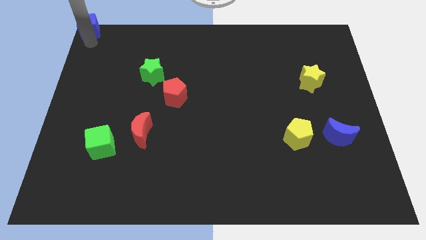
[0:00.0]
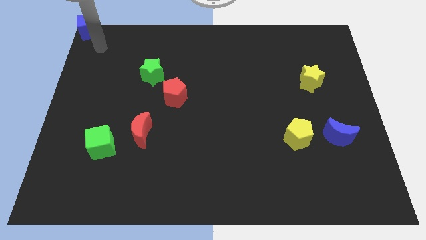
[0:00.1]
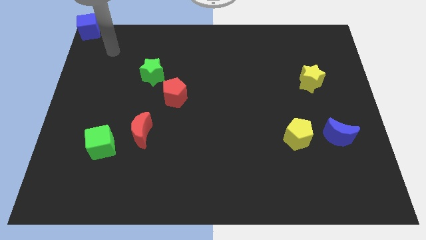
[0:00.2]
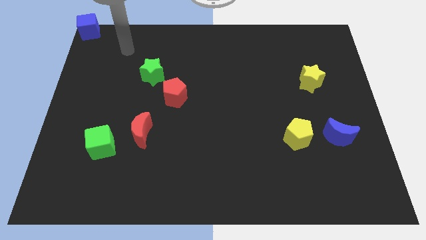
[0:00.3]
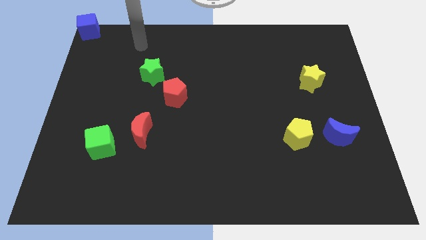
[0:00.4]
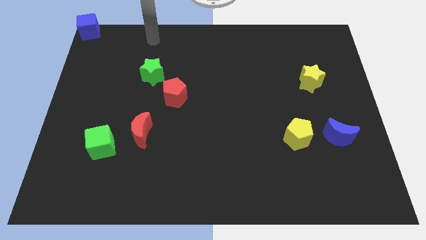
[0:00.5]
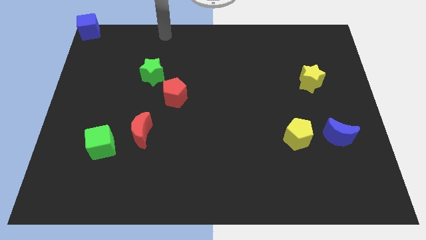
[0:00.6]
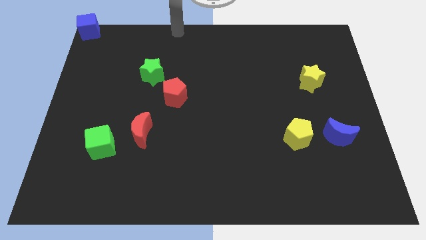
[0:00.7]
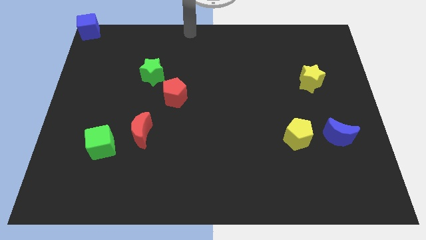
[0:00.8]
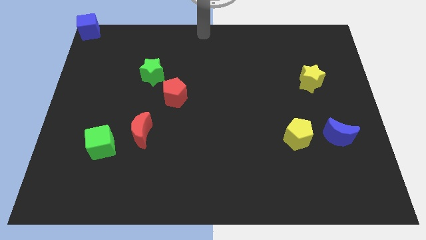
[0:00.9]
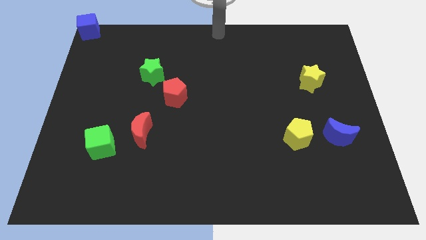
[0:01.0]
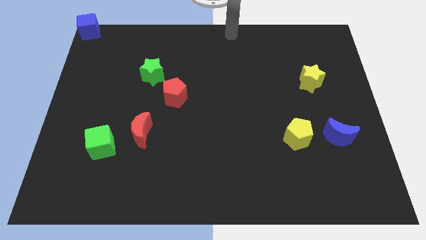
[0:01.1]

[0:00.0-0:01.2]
move yourself to the top center of the board

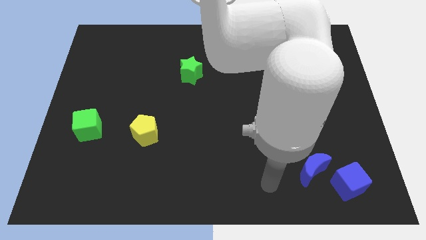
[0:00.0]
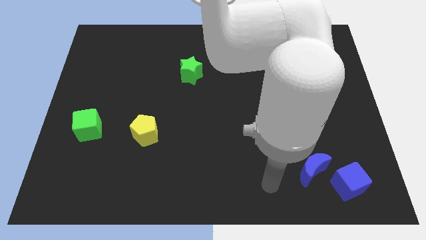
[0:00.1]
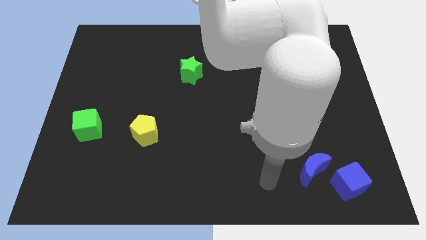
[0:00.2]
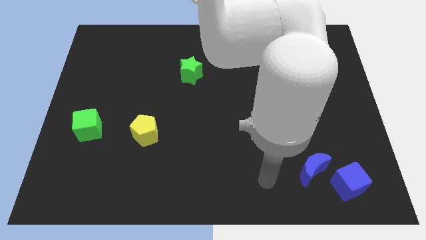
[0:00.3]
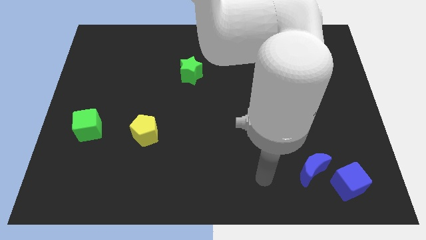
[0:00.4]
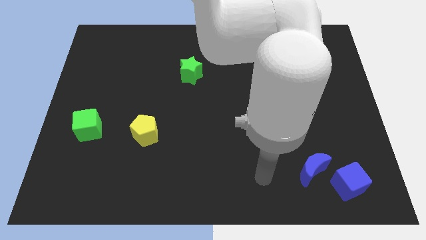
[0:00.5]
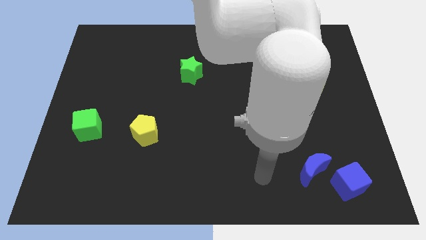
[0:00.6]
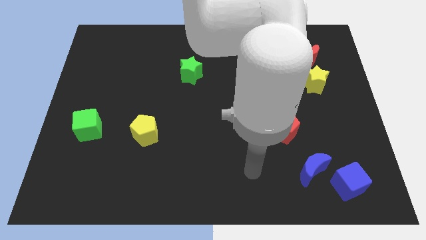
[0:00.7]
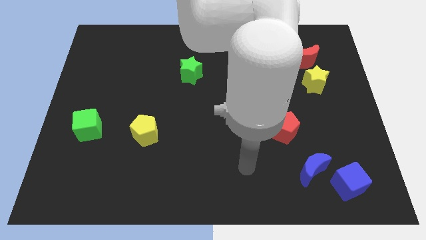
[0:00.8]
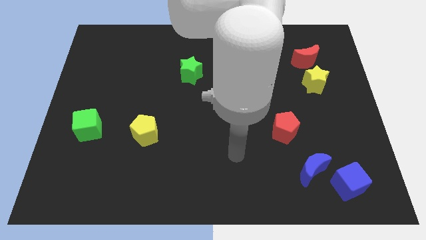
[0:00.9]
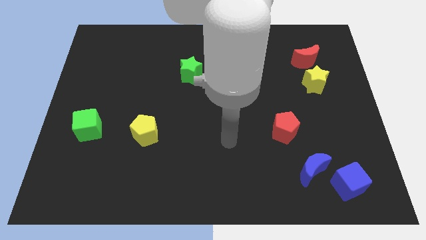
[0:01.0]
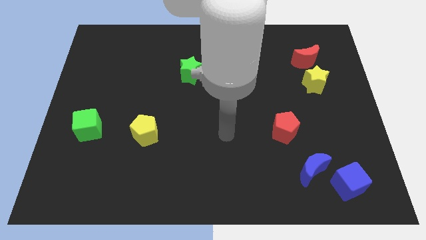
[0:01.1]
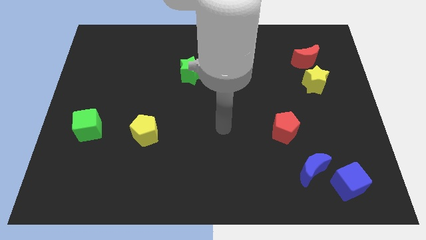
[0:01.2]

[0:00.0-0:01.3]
place your arm to the center of the board

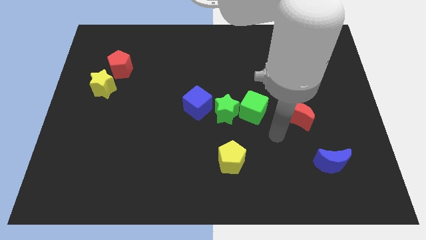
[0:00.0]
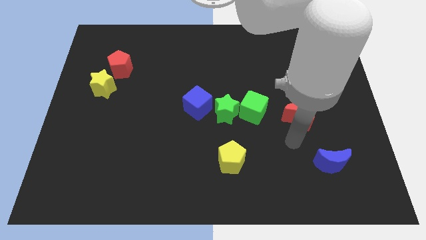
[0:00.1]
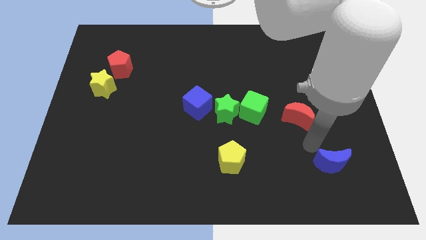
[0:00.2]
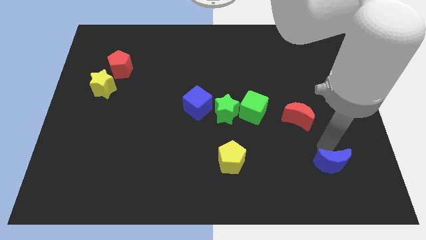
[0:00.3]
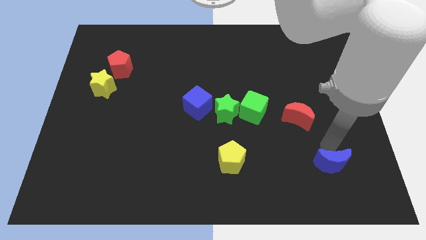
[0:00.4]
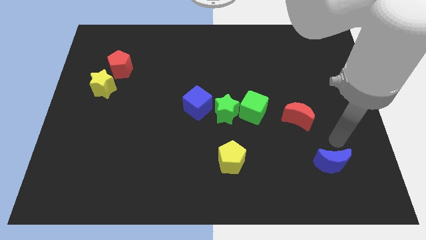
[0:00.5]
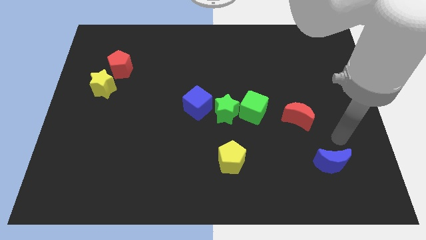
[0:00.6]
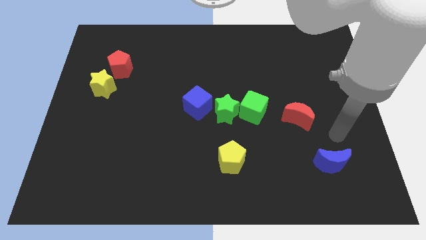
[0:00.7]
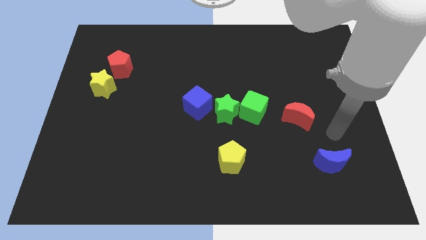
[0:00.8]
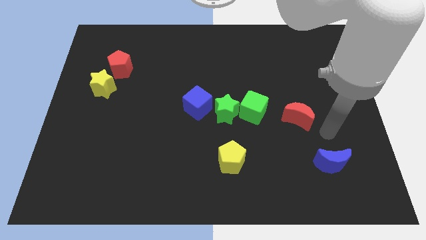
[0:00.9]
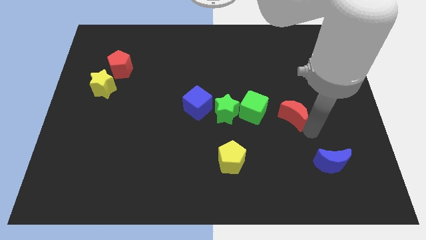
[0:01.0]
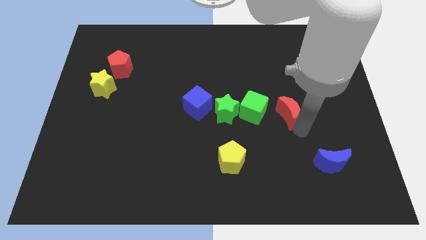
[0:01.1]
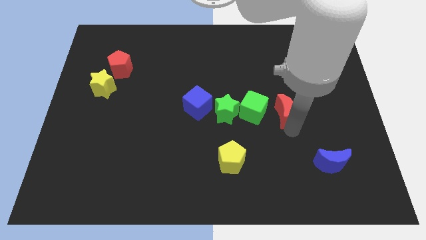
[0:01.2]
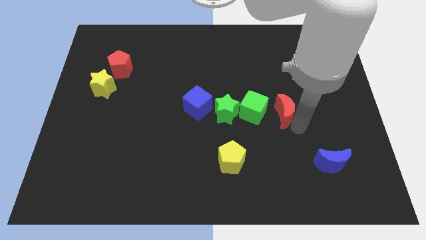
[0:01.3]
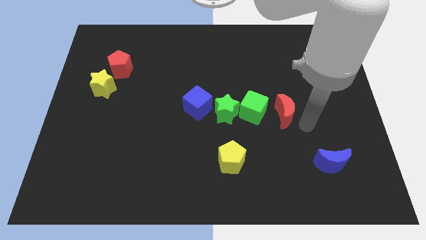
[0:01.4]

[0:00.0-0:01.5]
place the red moon to the right of green cube

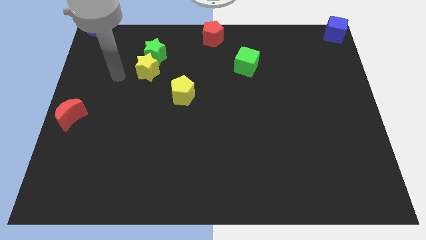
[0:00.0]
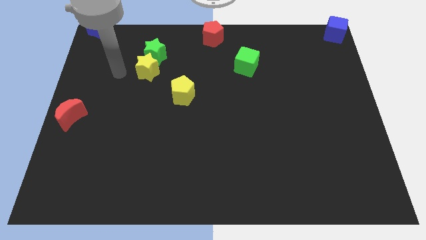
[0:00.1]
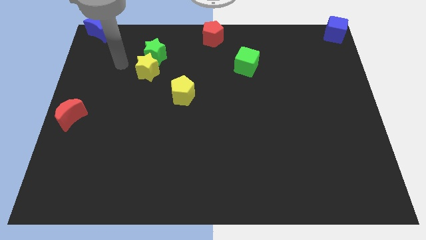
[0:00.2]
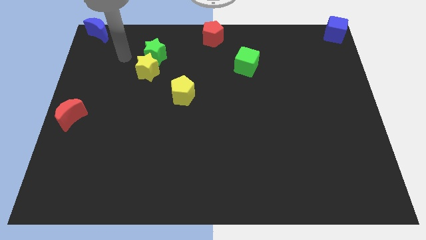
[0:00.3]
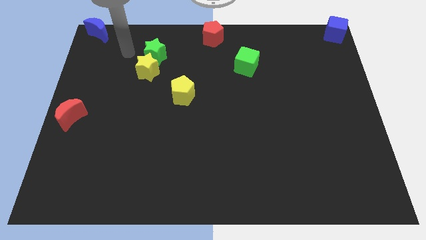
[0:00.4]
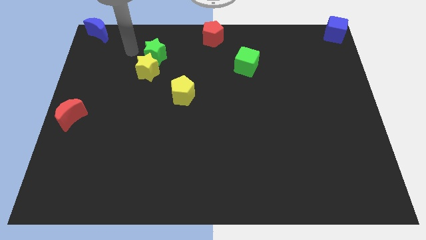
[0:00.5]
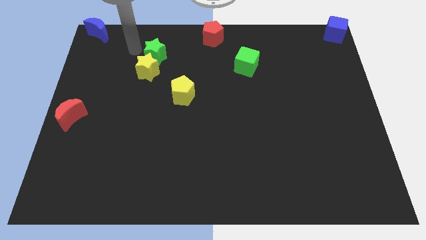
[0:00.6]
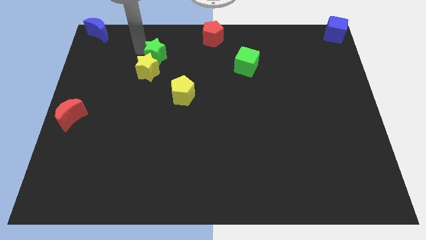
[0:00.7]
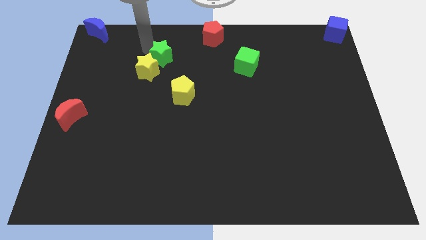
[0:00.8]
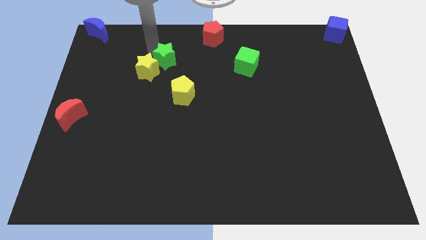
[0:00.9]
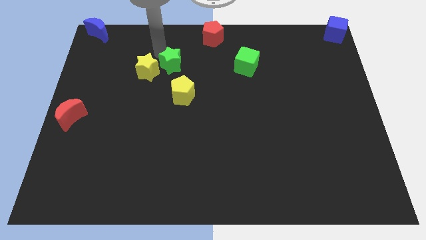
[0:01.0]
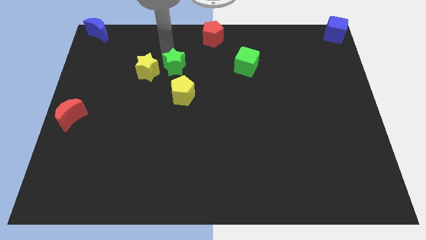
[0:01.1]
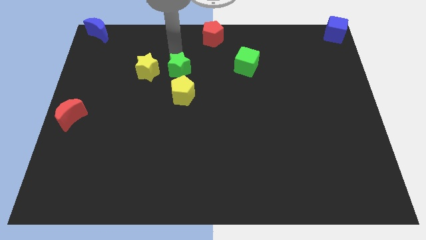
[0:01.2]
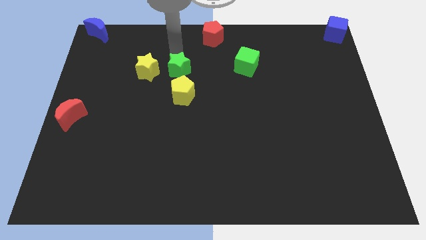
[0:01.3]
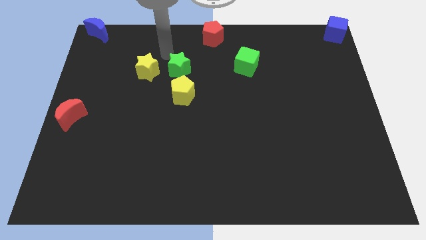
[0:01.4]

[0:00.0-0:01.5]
place the green star above the yellow pentagon

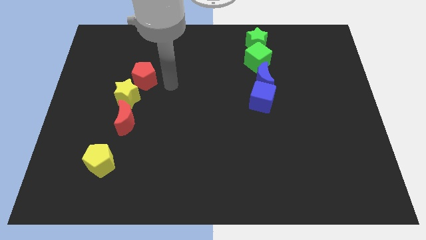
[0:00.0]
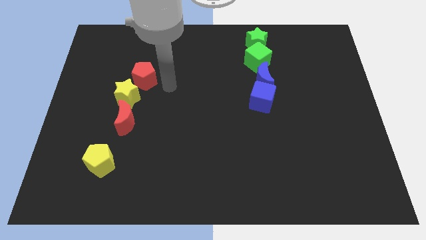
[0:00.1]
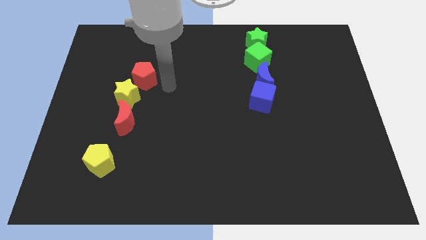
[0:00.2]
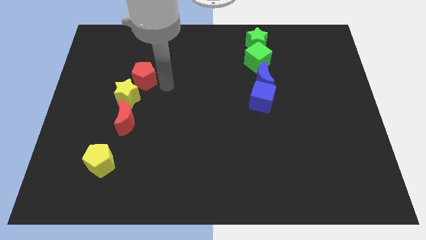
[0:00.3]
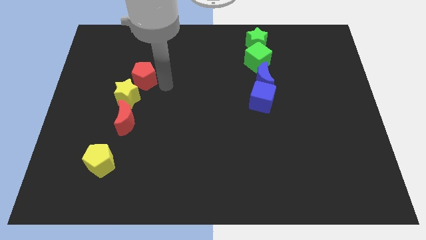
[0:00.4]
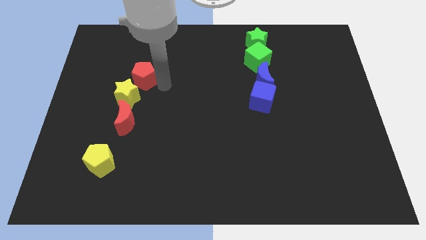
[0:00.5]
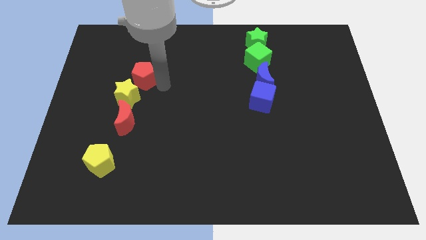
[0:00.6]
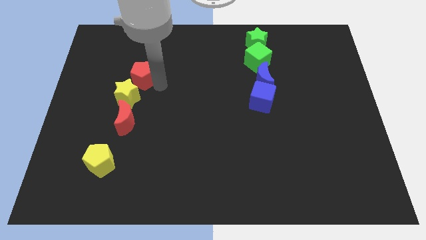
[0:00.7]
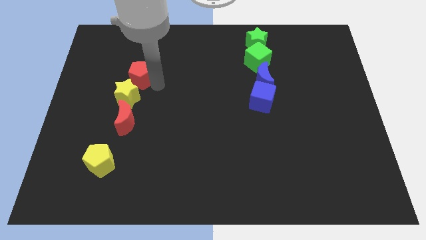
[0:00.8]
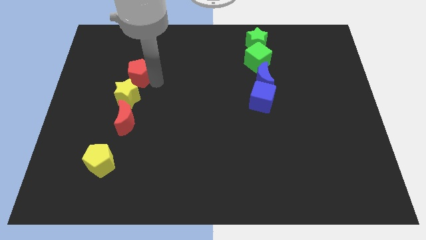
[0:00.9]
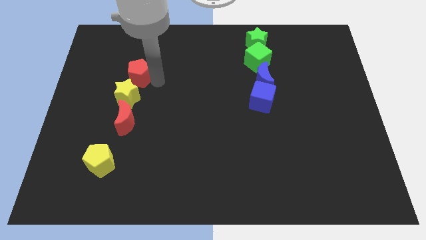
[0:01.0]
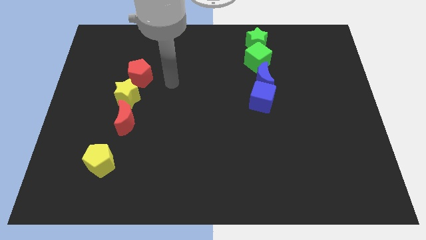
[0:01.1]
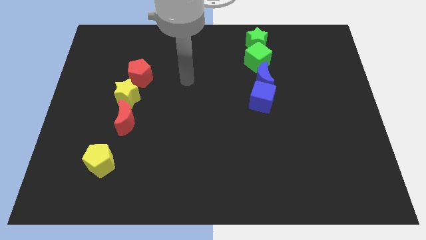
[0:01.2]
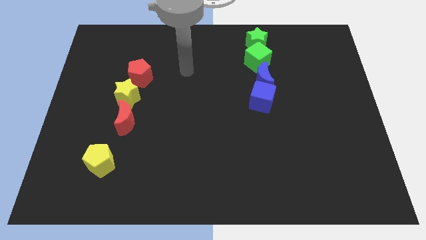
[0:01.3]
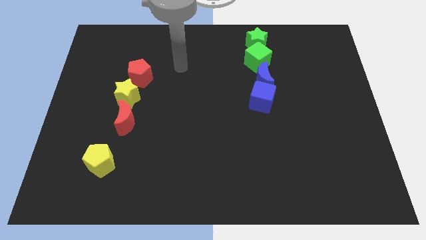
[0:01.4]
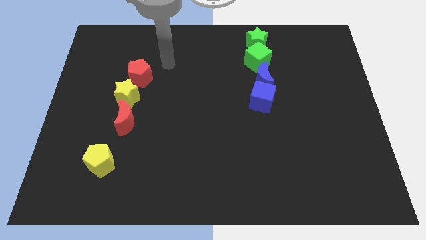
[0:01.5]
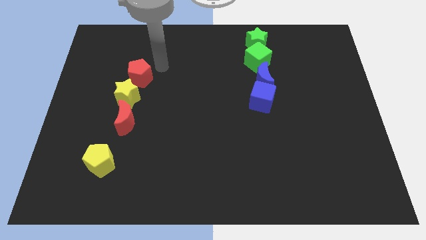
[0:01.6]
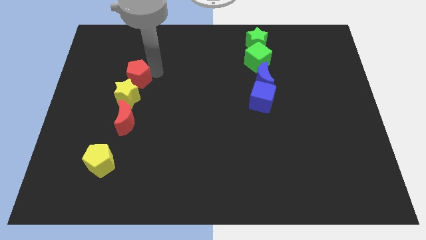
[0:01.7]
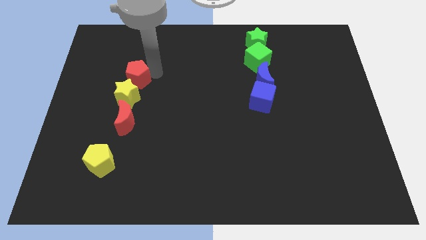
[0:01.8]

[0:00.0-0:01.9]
slide the red pentagon close to the yellow star

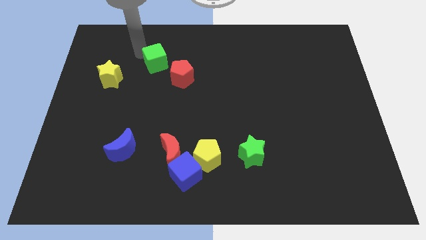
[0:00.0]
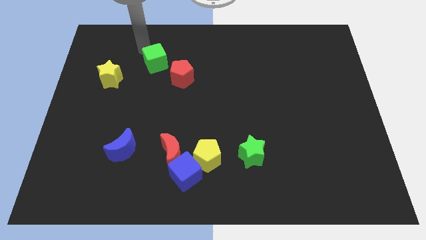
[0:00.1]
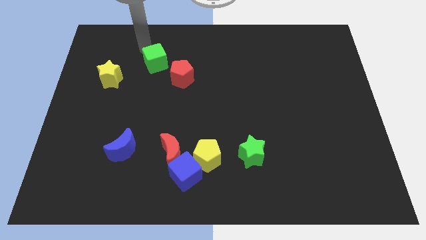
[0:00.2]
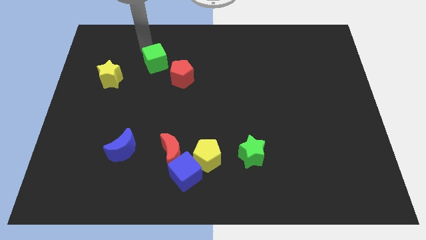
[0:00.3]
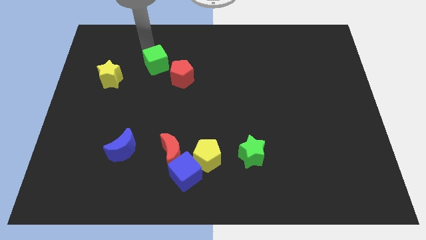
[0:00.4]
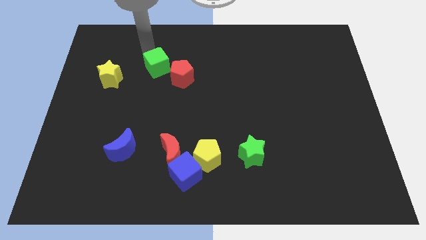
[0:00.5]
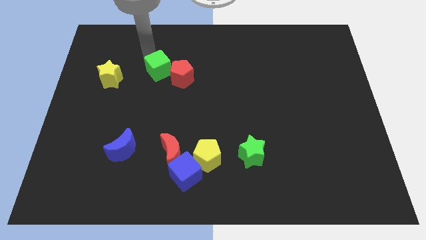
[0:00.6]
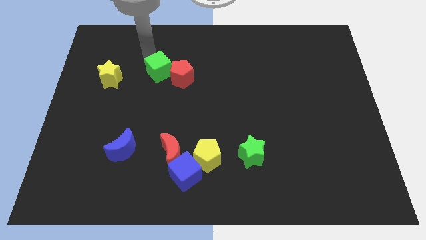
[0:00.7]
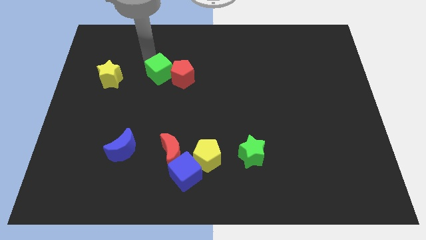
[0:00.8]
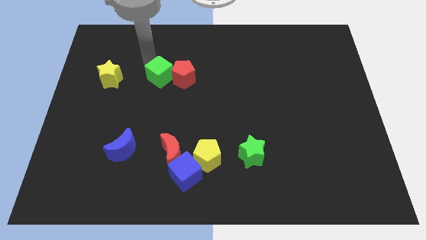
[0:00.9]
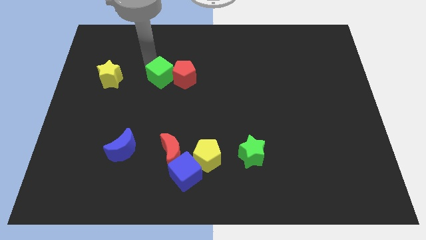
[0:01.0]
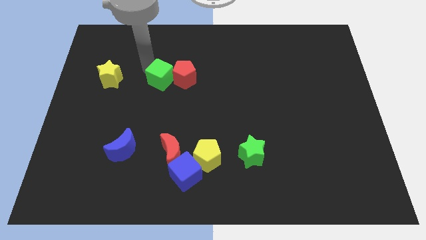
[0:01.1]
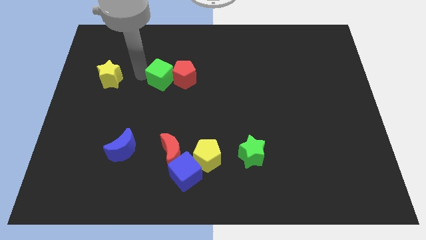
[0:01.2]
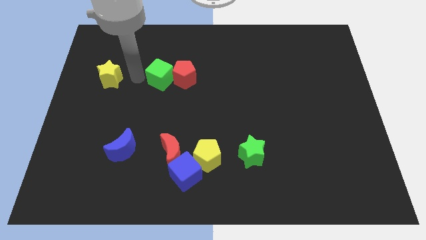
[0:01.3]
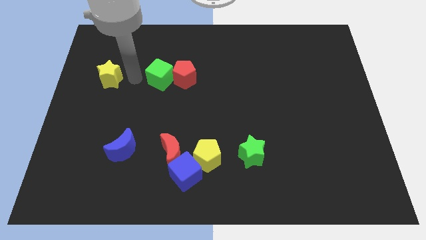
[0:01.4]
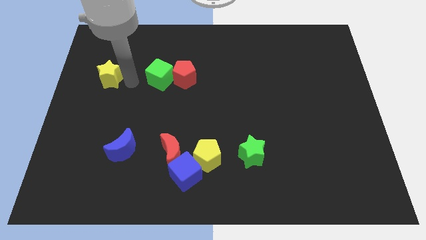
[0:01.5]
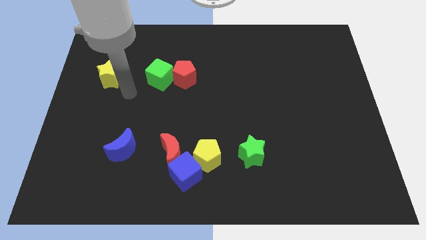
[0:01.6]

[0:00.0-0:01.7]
place green cube close to the red pentagon
